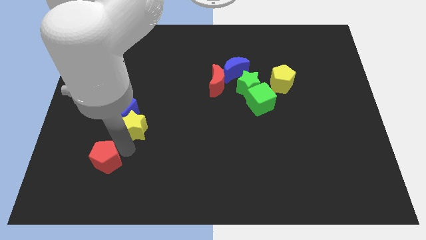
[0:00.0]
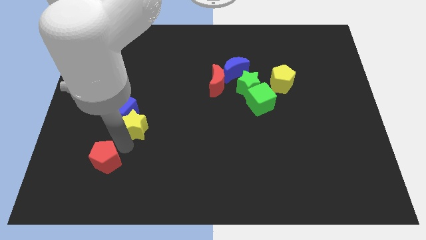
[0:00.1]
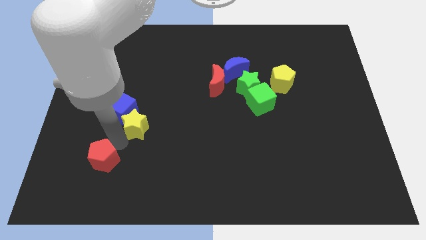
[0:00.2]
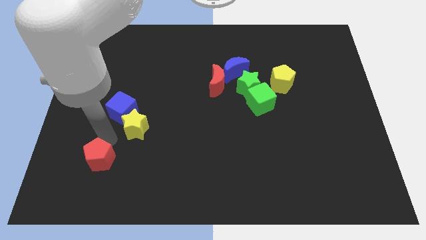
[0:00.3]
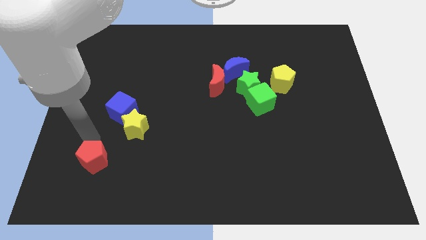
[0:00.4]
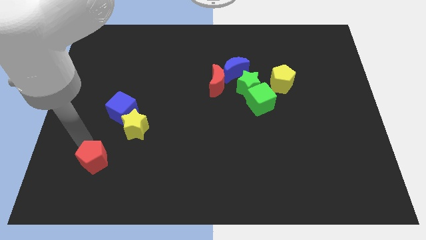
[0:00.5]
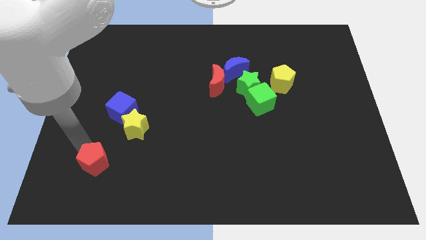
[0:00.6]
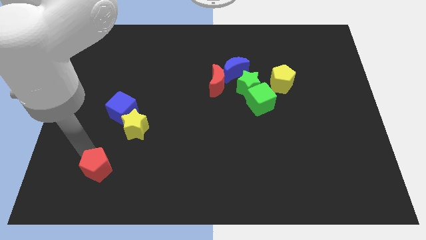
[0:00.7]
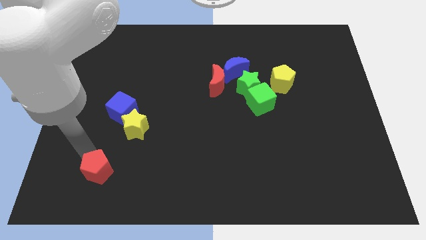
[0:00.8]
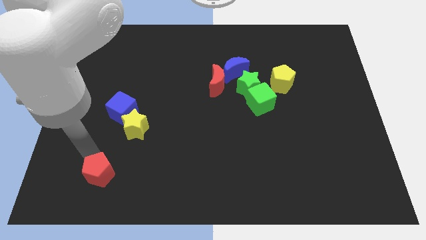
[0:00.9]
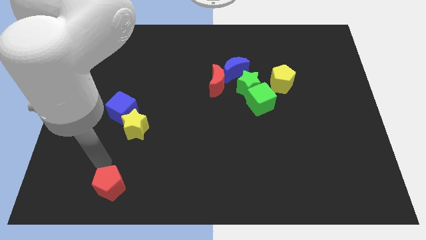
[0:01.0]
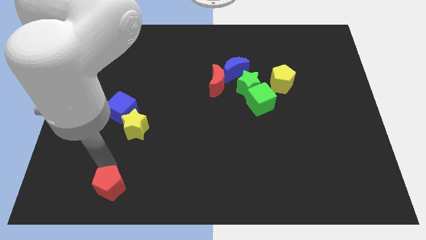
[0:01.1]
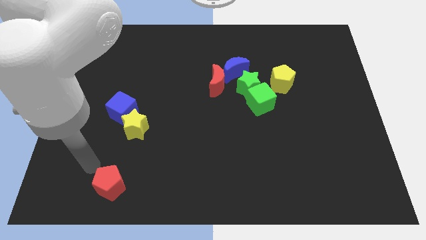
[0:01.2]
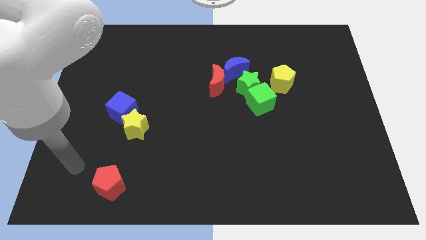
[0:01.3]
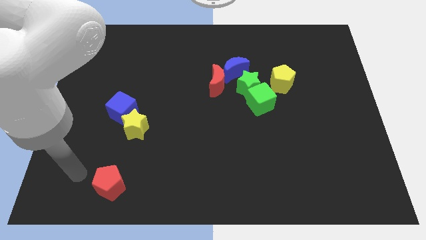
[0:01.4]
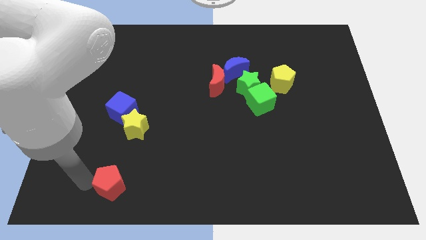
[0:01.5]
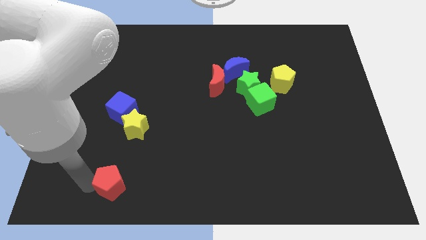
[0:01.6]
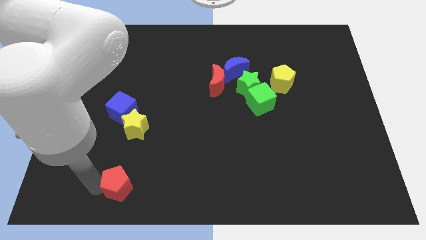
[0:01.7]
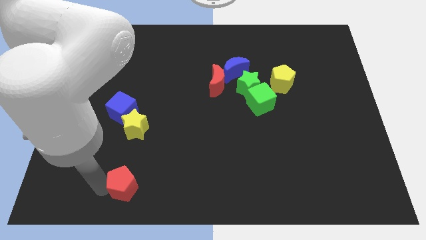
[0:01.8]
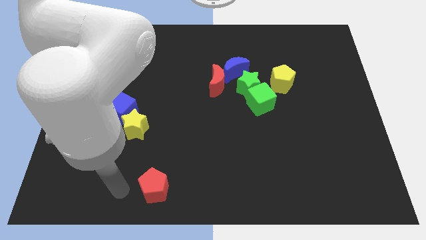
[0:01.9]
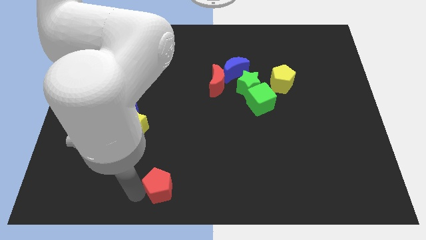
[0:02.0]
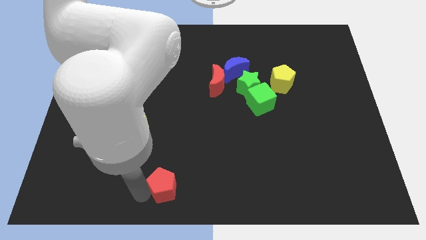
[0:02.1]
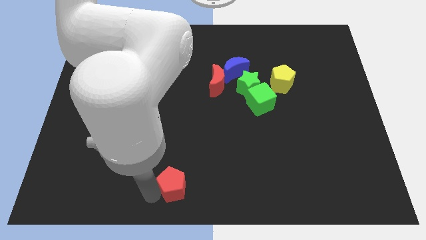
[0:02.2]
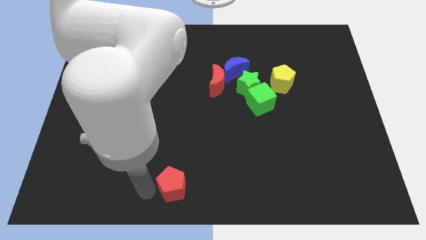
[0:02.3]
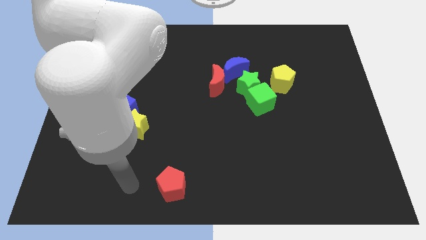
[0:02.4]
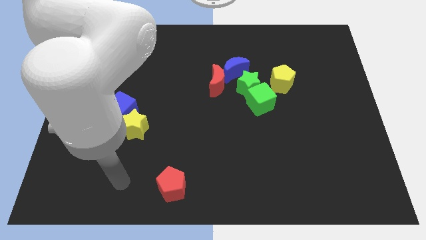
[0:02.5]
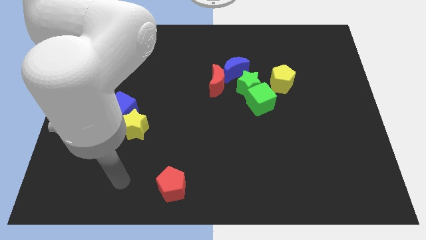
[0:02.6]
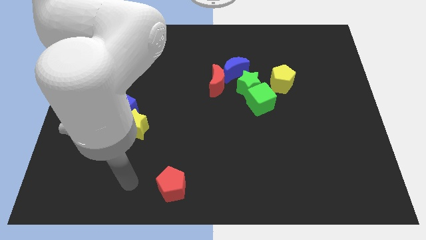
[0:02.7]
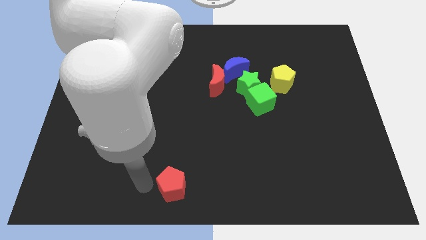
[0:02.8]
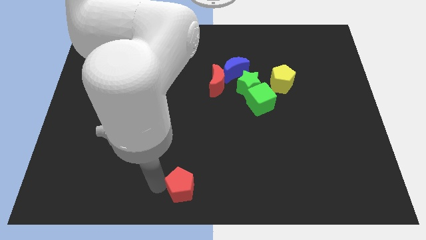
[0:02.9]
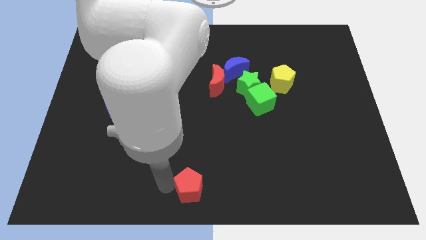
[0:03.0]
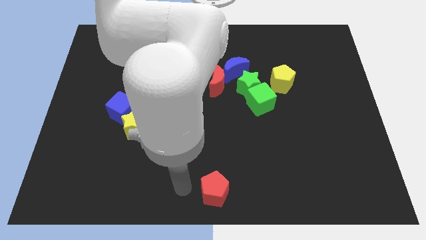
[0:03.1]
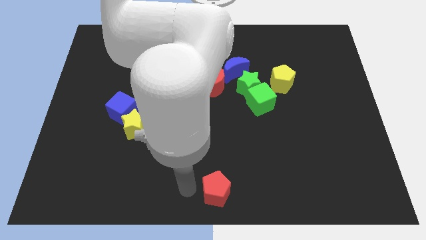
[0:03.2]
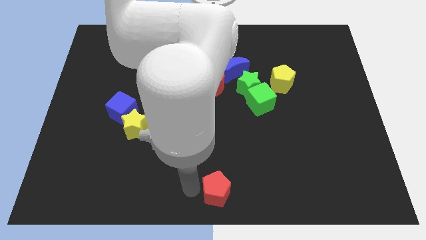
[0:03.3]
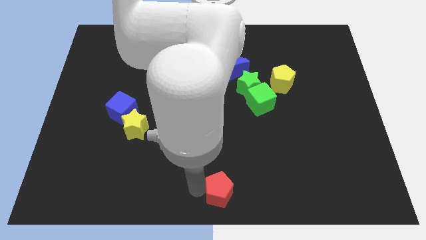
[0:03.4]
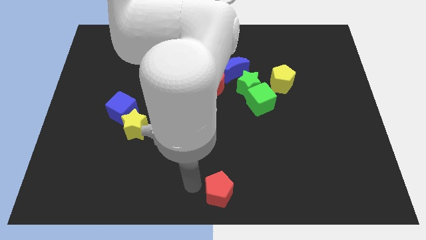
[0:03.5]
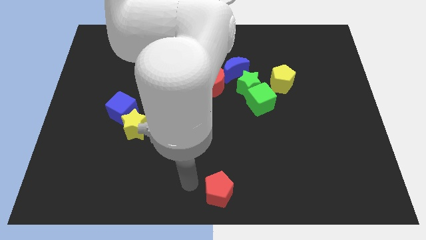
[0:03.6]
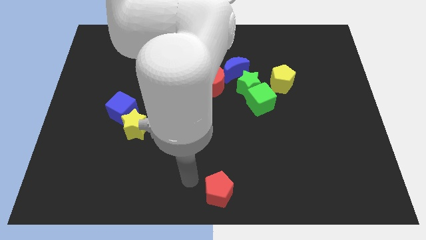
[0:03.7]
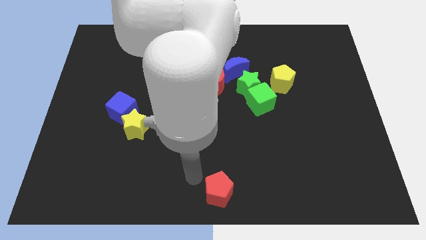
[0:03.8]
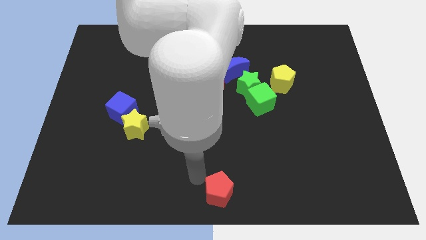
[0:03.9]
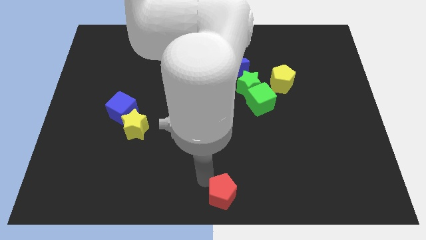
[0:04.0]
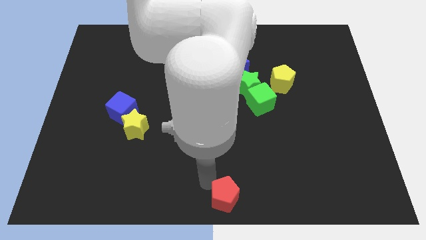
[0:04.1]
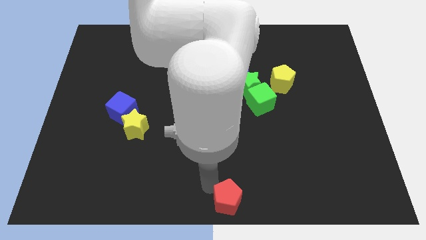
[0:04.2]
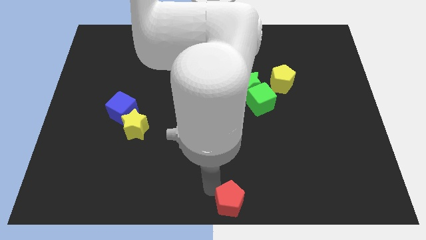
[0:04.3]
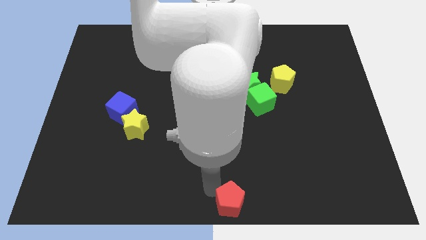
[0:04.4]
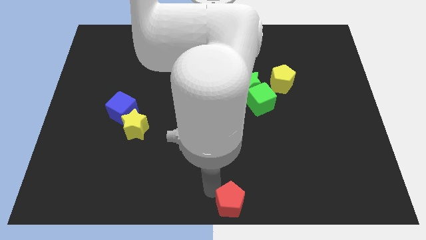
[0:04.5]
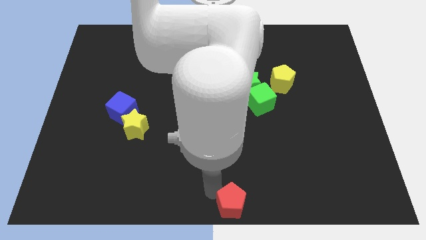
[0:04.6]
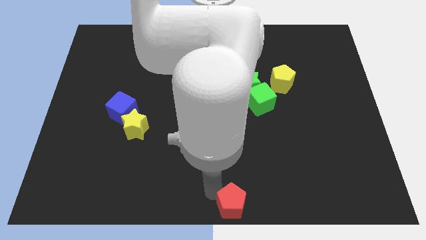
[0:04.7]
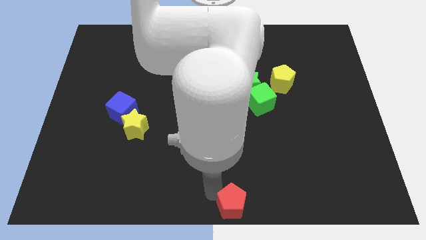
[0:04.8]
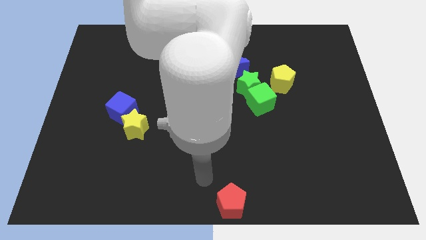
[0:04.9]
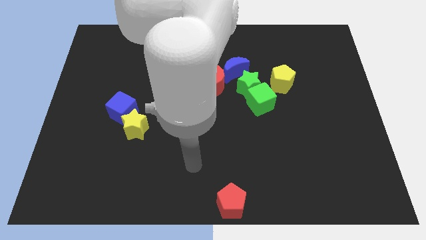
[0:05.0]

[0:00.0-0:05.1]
push red pentagon to the bottom center

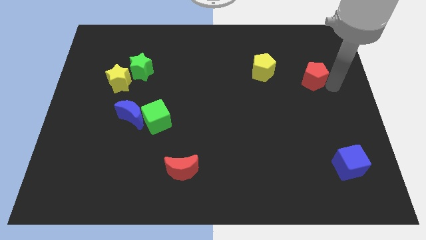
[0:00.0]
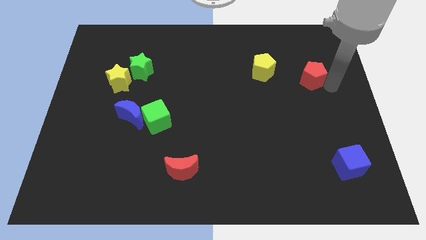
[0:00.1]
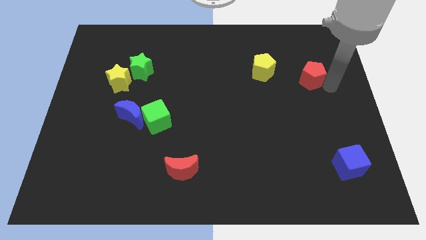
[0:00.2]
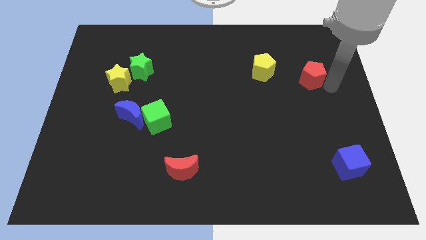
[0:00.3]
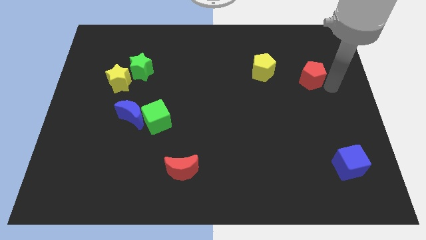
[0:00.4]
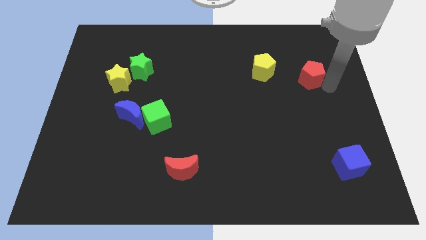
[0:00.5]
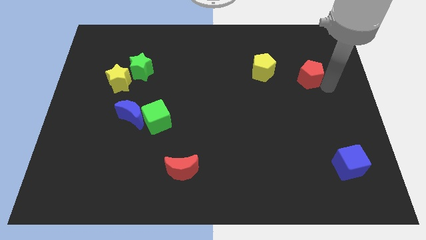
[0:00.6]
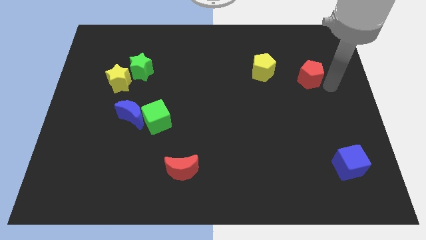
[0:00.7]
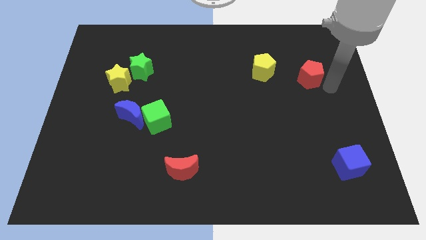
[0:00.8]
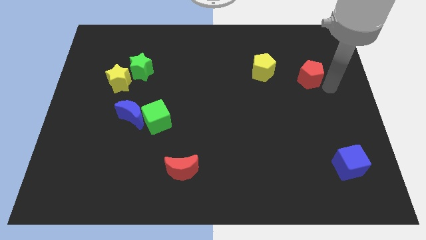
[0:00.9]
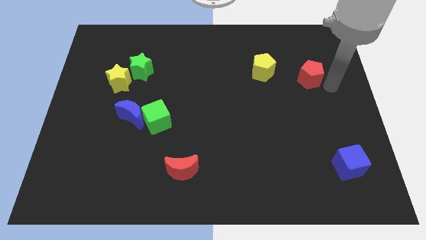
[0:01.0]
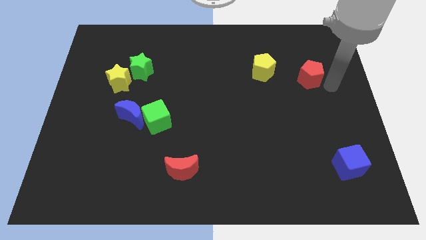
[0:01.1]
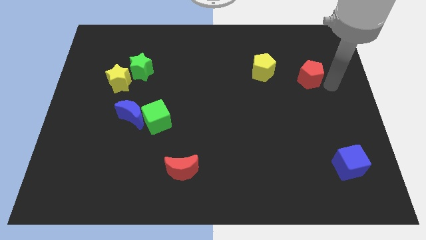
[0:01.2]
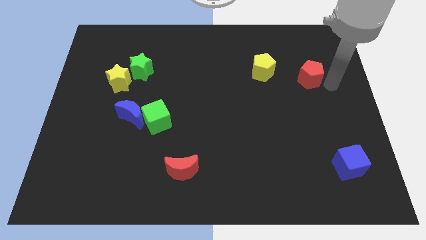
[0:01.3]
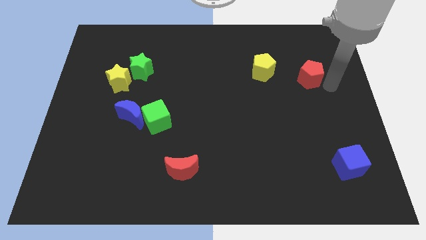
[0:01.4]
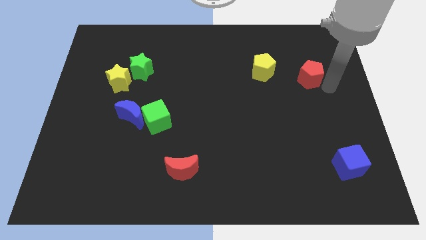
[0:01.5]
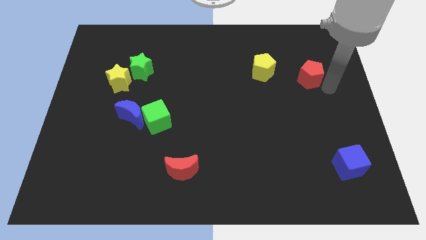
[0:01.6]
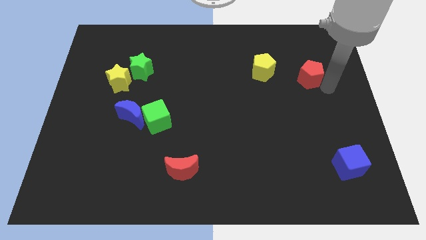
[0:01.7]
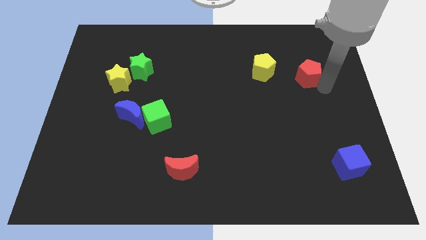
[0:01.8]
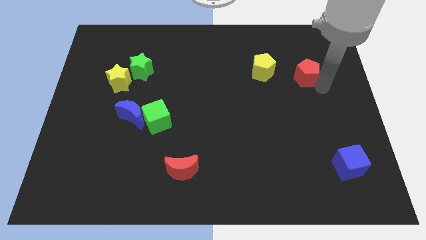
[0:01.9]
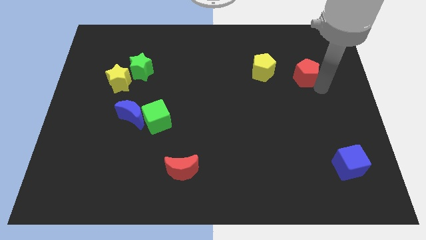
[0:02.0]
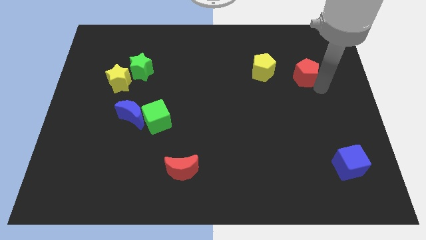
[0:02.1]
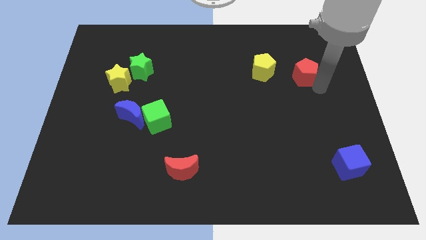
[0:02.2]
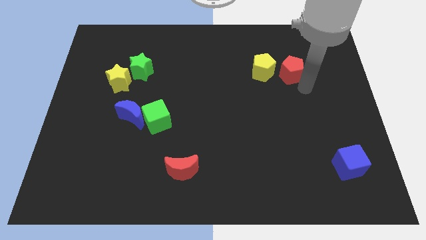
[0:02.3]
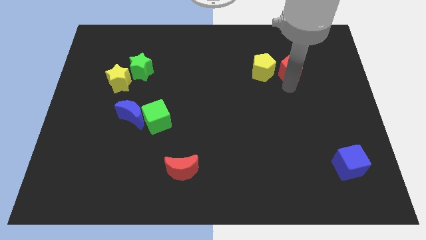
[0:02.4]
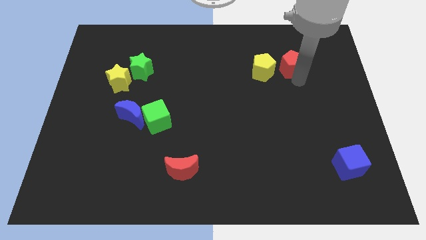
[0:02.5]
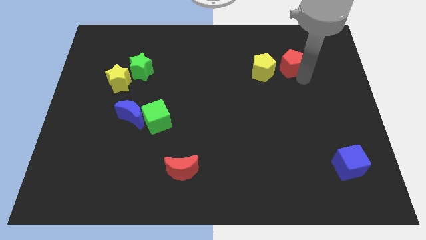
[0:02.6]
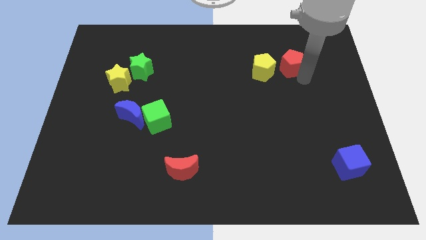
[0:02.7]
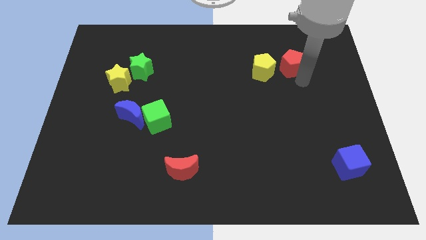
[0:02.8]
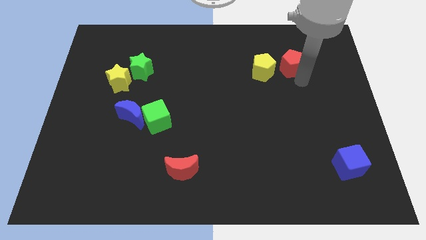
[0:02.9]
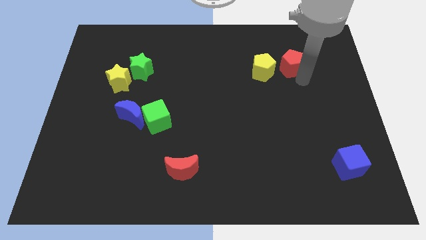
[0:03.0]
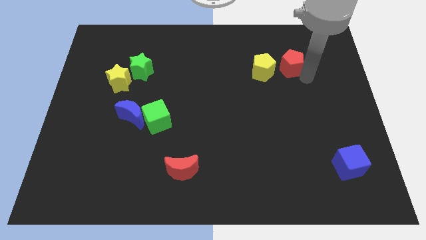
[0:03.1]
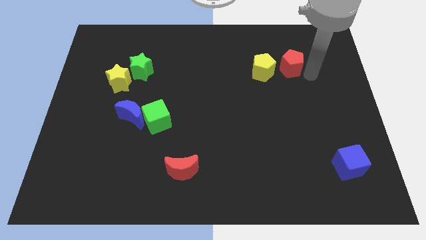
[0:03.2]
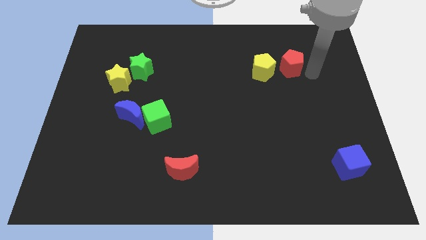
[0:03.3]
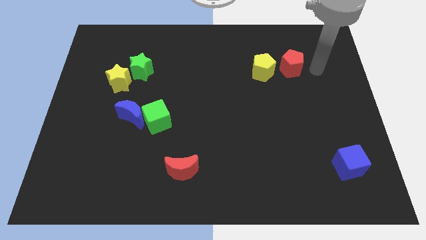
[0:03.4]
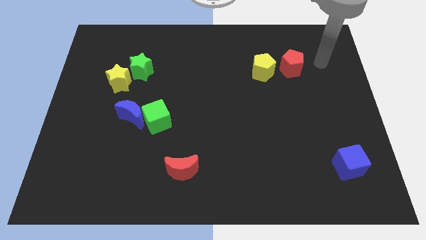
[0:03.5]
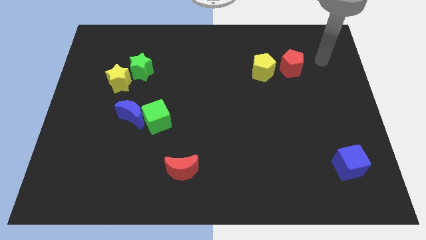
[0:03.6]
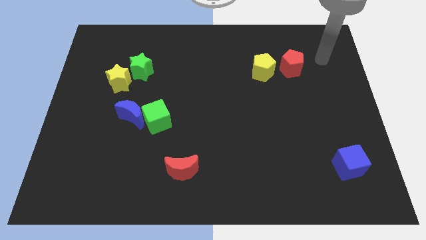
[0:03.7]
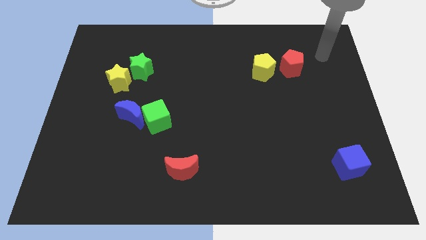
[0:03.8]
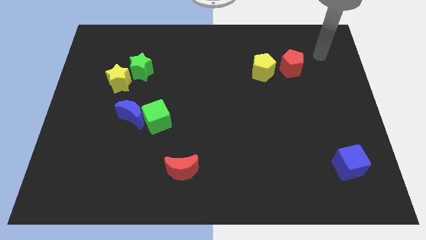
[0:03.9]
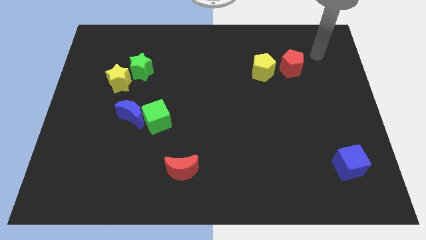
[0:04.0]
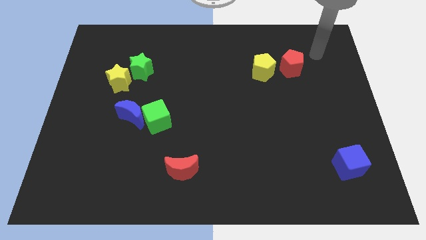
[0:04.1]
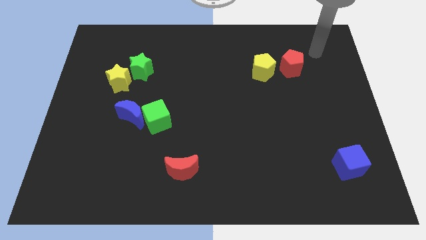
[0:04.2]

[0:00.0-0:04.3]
place the red pentagon to the right side of yellow pentagon
